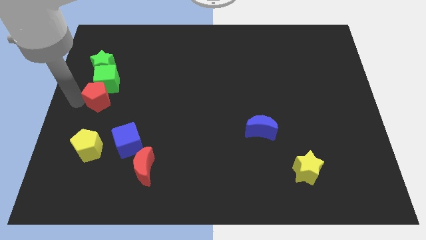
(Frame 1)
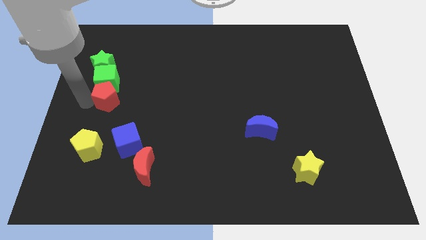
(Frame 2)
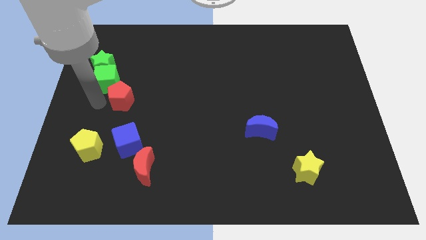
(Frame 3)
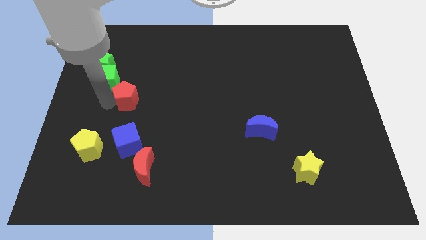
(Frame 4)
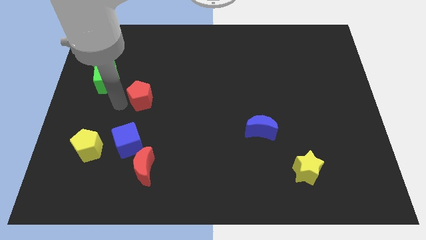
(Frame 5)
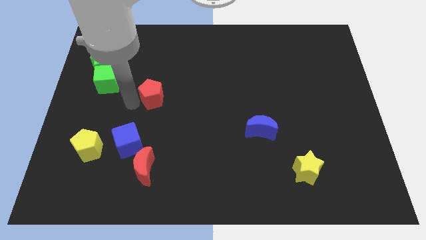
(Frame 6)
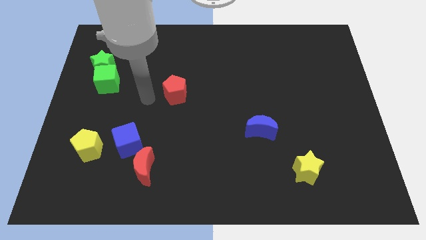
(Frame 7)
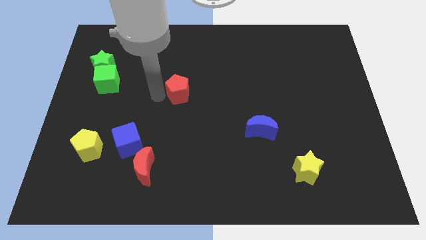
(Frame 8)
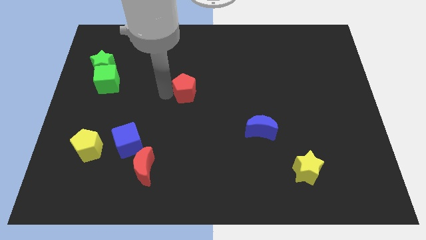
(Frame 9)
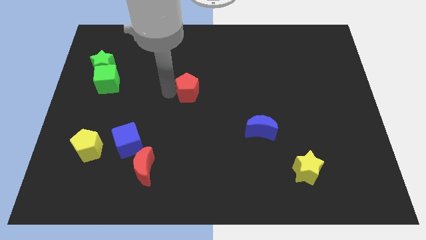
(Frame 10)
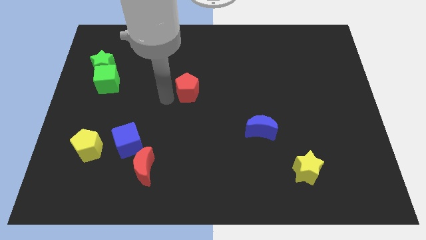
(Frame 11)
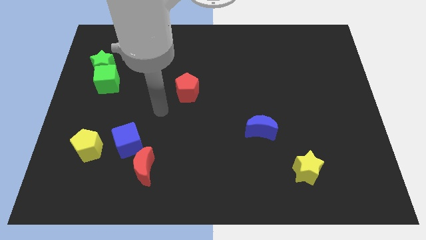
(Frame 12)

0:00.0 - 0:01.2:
move the red pentagon slightly top right of the board

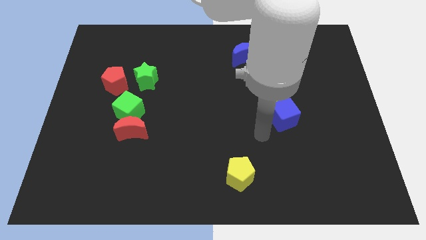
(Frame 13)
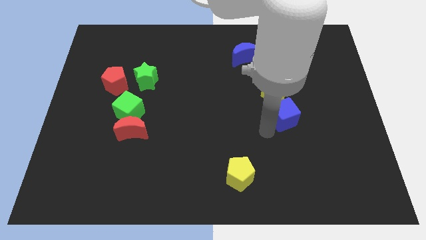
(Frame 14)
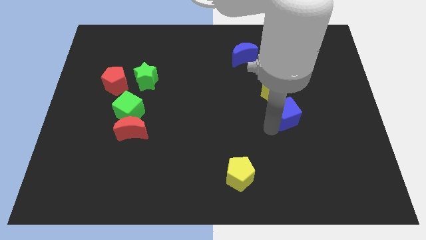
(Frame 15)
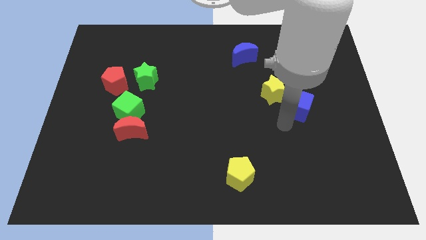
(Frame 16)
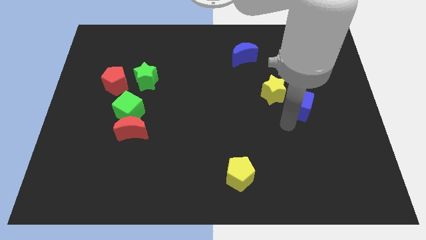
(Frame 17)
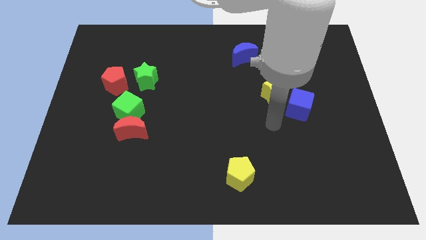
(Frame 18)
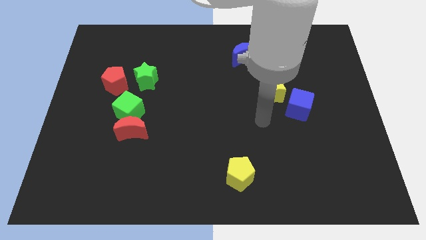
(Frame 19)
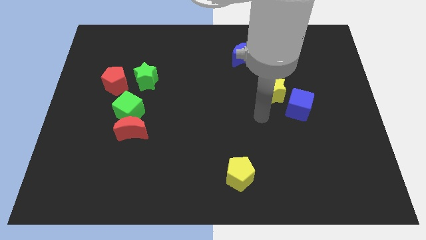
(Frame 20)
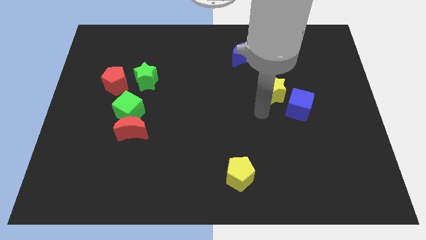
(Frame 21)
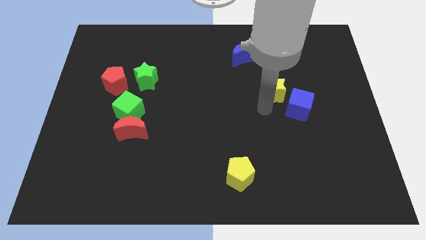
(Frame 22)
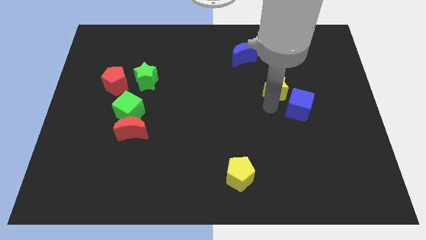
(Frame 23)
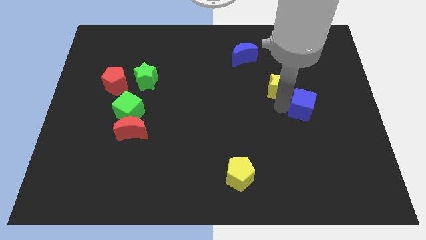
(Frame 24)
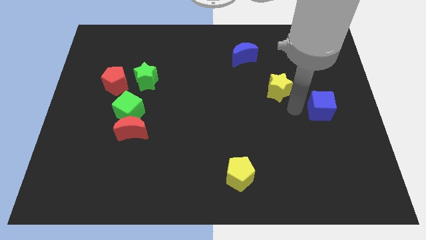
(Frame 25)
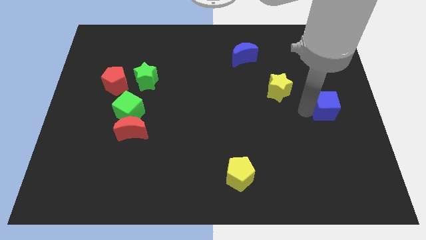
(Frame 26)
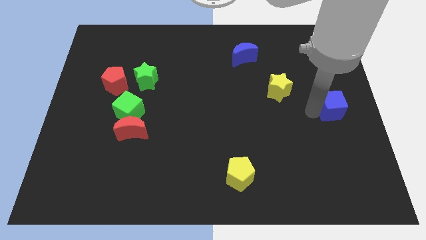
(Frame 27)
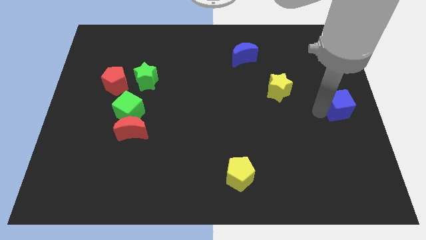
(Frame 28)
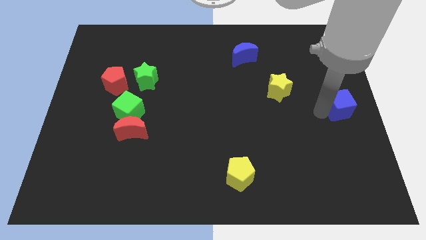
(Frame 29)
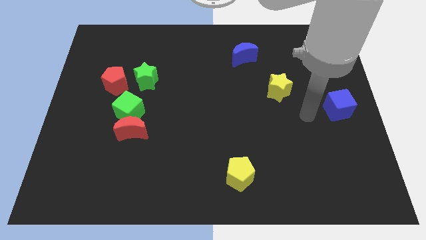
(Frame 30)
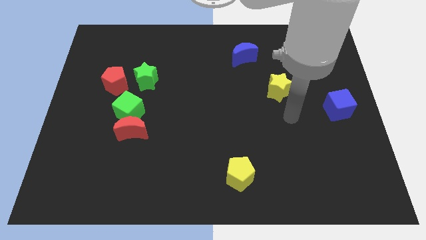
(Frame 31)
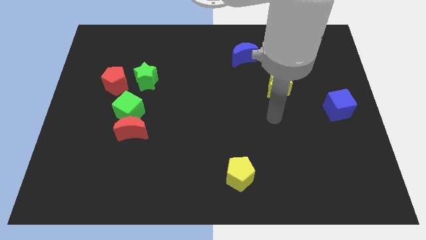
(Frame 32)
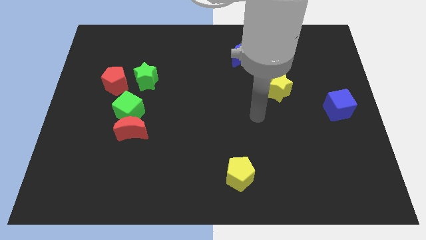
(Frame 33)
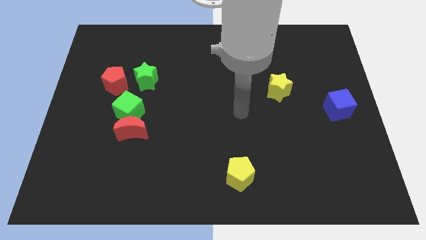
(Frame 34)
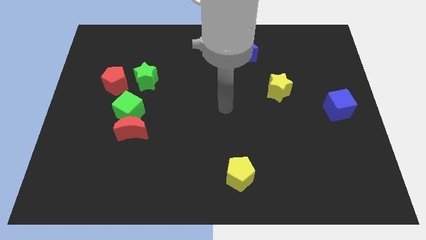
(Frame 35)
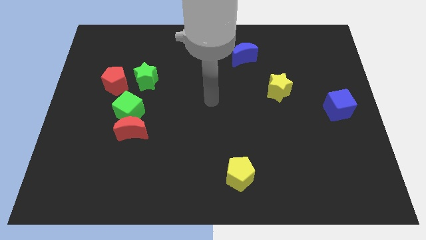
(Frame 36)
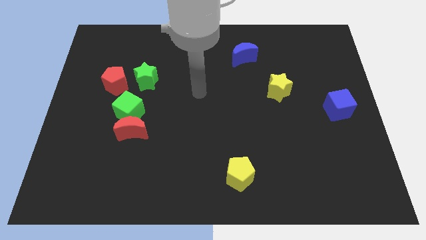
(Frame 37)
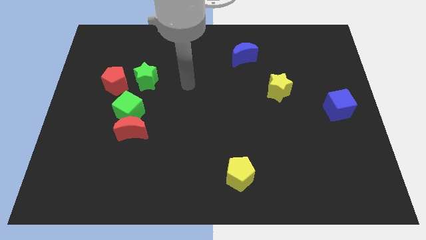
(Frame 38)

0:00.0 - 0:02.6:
push the blue cube towards the center right

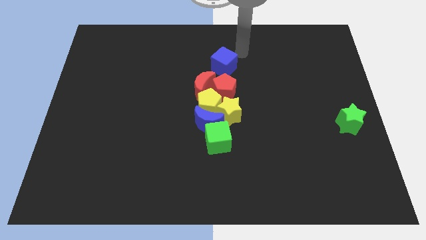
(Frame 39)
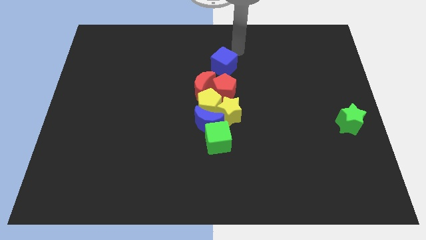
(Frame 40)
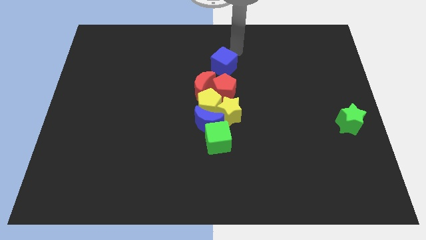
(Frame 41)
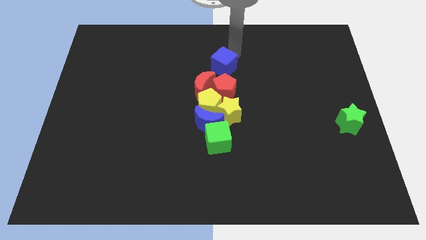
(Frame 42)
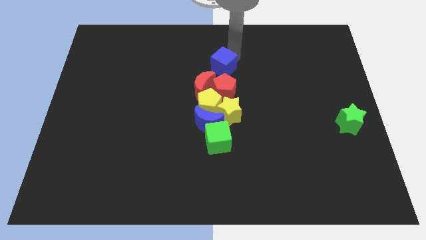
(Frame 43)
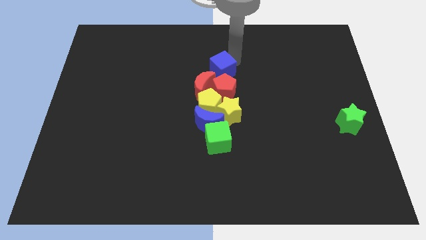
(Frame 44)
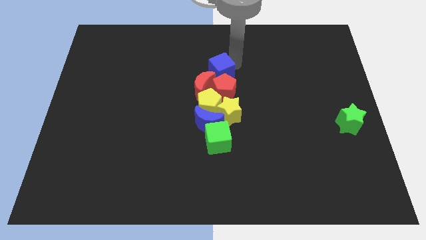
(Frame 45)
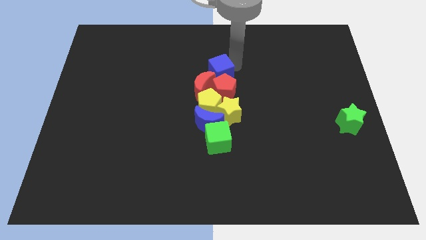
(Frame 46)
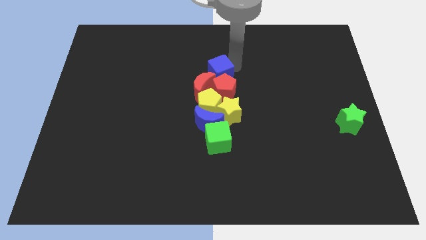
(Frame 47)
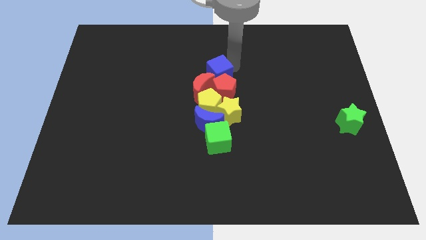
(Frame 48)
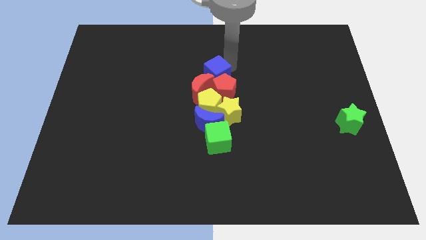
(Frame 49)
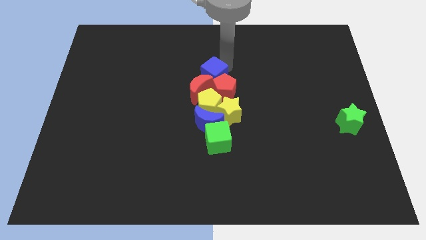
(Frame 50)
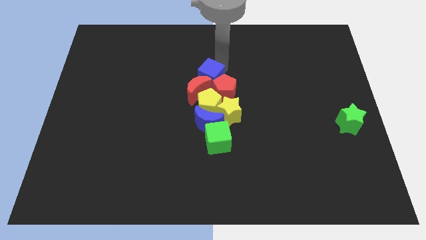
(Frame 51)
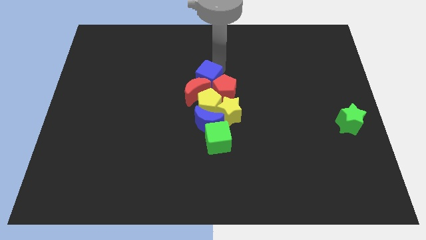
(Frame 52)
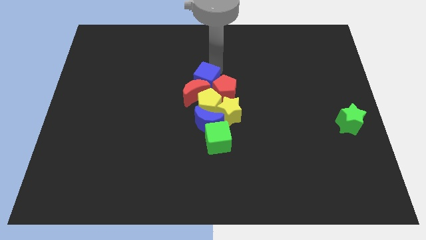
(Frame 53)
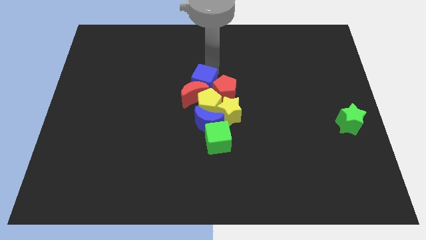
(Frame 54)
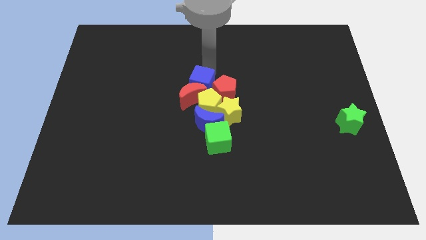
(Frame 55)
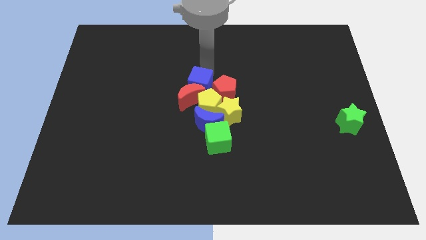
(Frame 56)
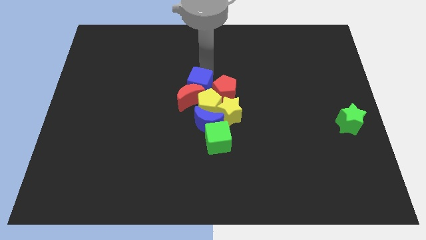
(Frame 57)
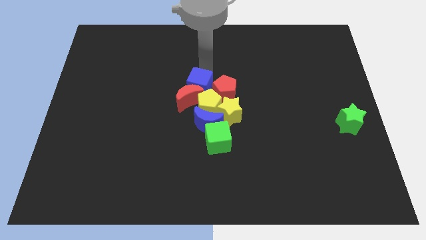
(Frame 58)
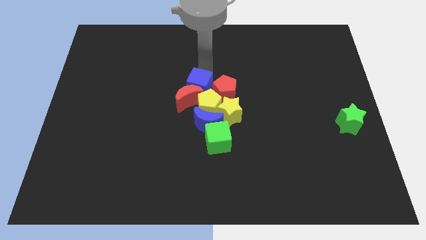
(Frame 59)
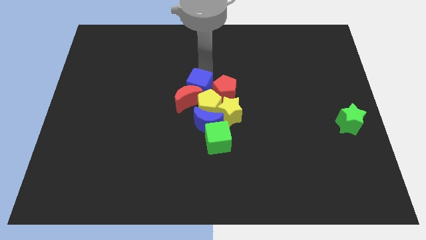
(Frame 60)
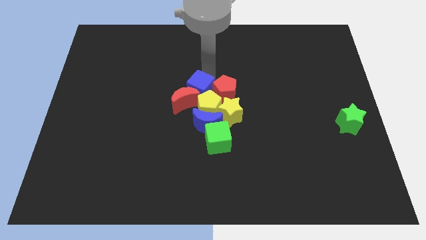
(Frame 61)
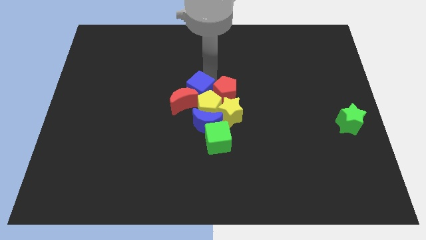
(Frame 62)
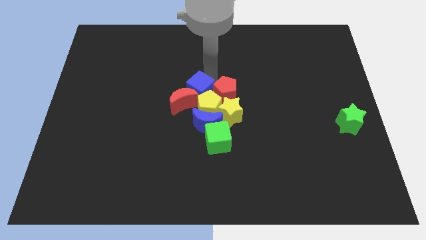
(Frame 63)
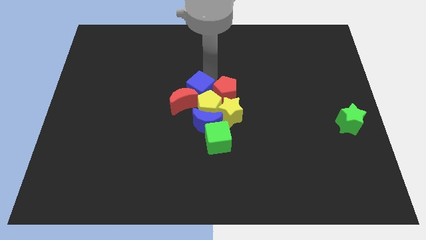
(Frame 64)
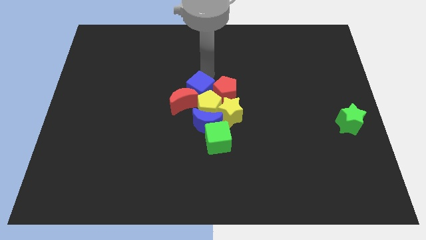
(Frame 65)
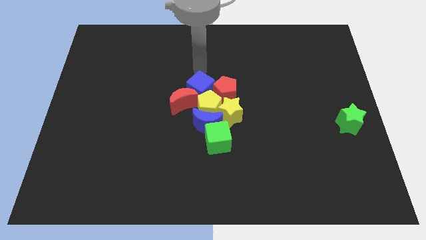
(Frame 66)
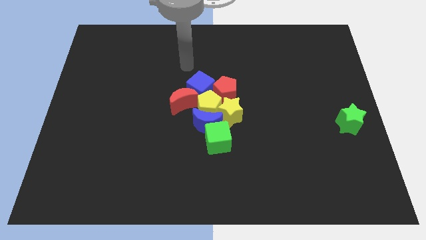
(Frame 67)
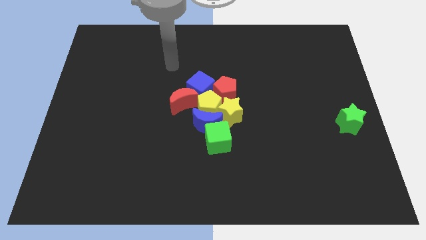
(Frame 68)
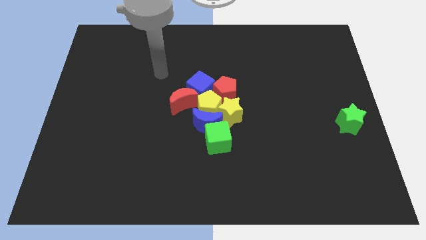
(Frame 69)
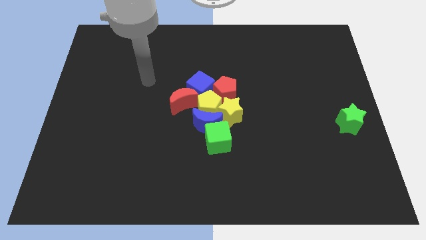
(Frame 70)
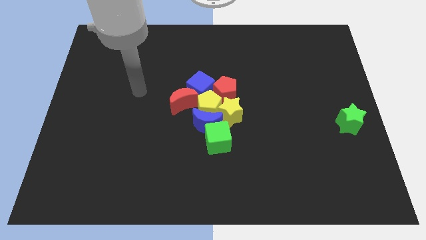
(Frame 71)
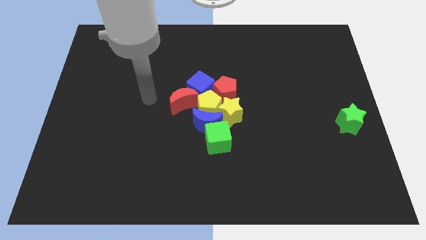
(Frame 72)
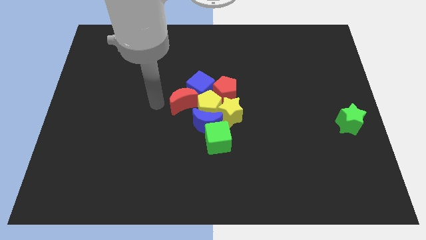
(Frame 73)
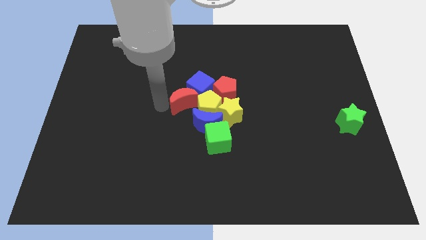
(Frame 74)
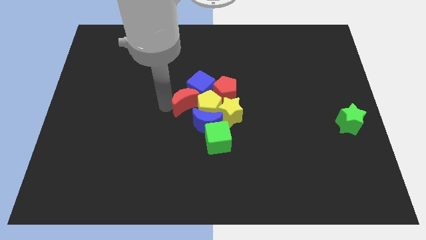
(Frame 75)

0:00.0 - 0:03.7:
push blue cube and red crescent to the bottom left side of the board

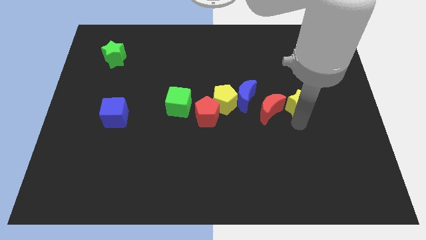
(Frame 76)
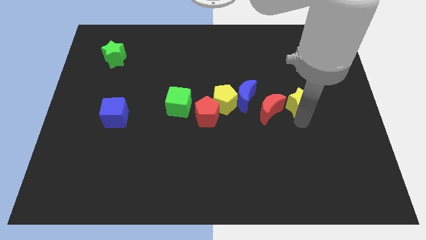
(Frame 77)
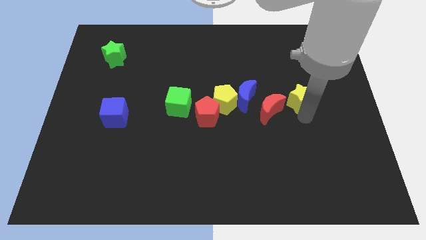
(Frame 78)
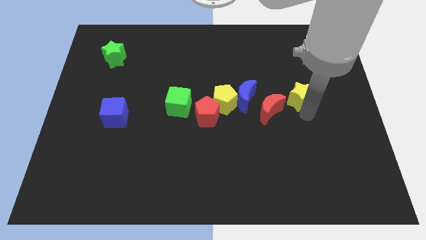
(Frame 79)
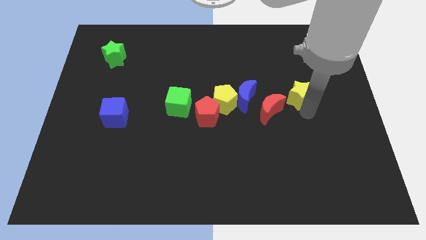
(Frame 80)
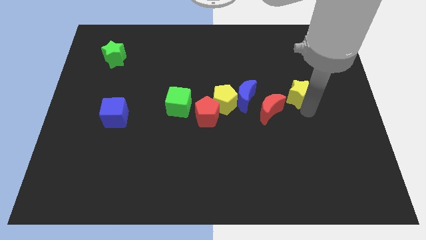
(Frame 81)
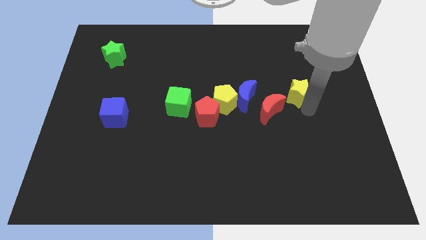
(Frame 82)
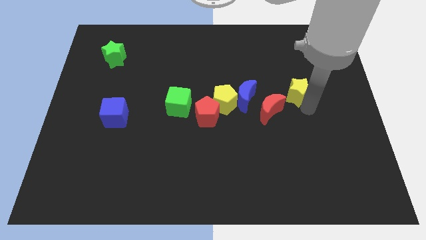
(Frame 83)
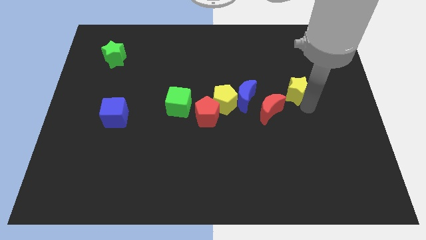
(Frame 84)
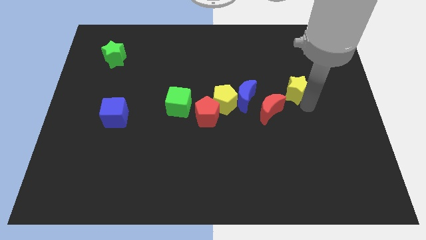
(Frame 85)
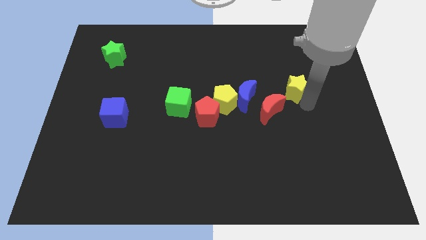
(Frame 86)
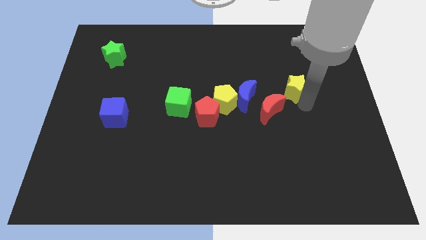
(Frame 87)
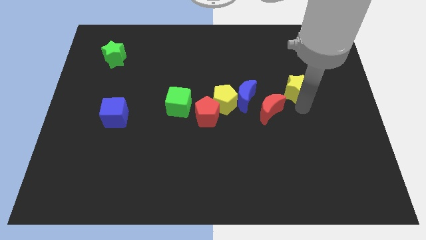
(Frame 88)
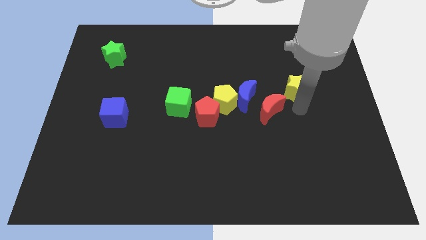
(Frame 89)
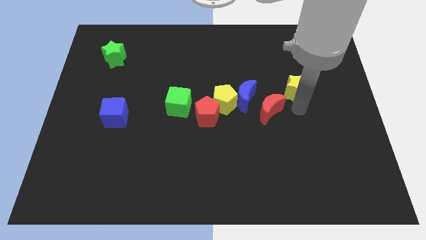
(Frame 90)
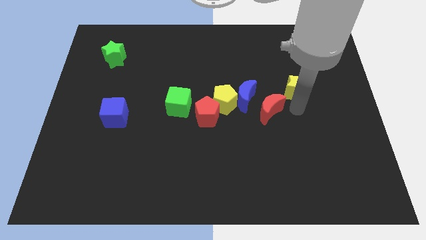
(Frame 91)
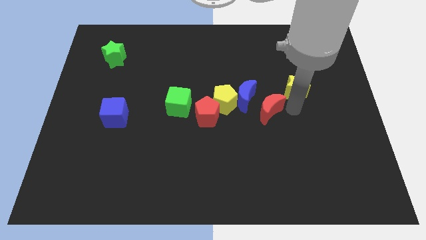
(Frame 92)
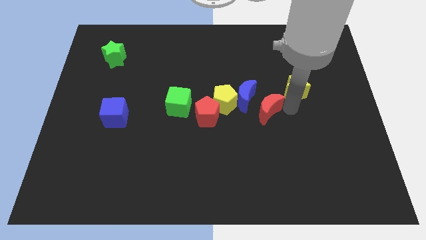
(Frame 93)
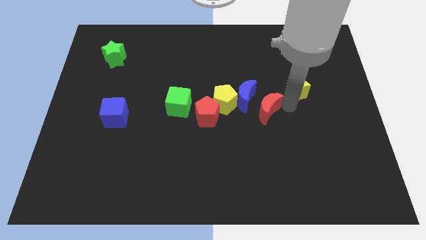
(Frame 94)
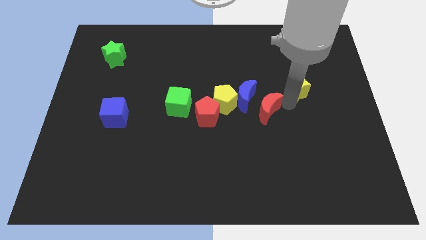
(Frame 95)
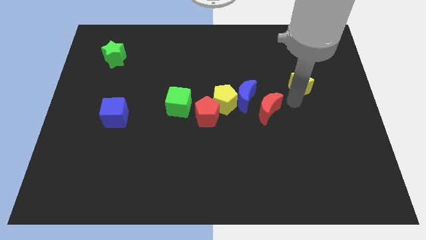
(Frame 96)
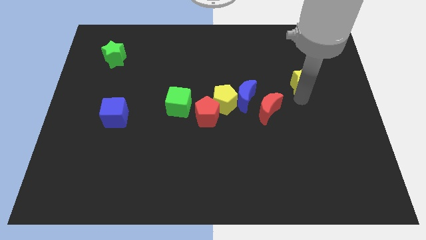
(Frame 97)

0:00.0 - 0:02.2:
separate the yellow star from the red crescent
